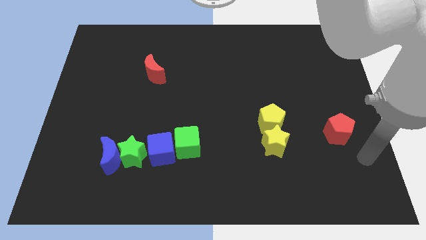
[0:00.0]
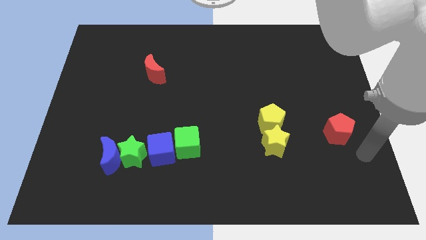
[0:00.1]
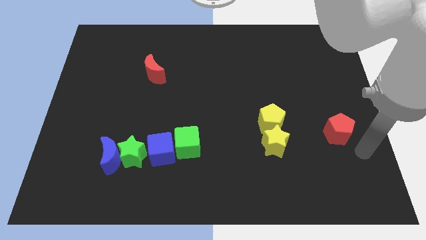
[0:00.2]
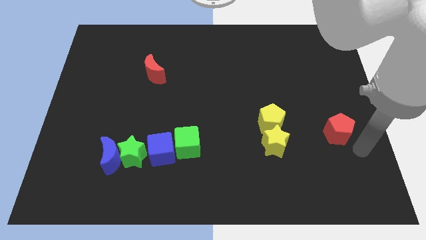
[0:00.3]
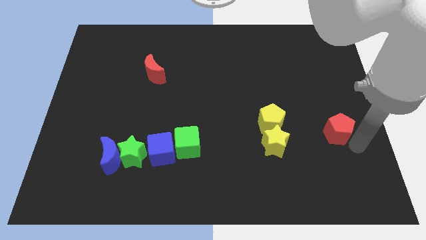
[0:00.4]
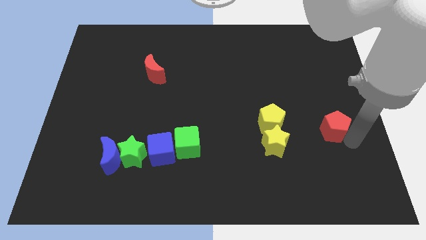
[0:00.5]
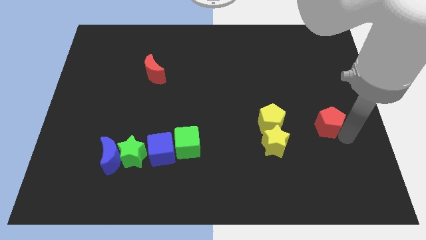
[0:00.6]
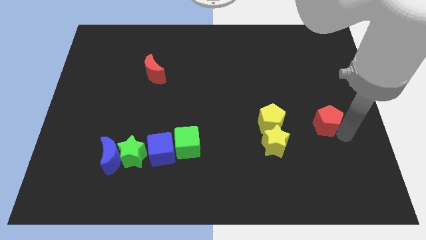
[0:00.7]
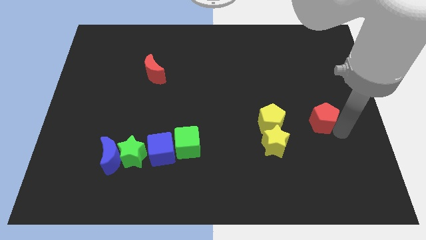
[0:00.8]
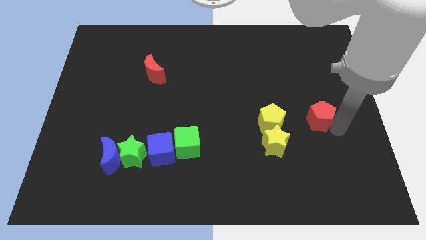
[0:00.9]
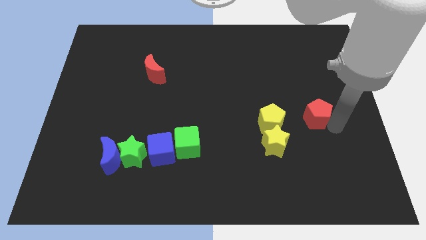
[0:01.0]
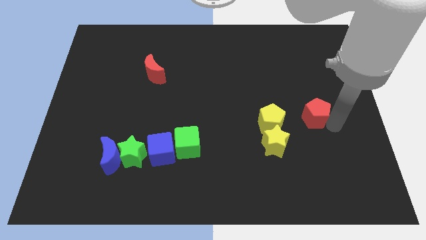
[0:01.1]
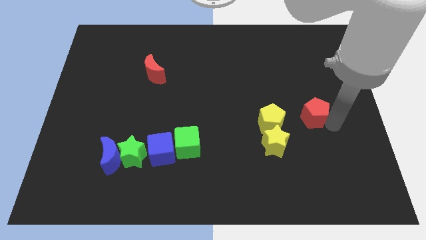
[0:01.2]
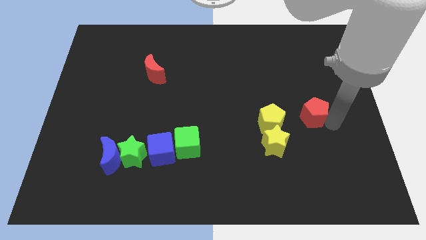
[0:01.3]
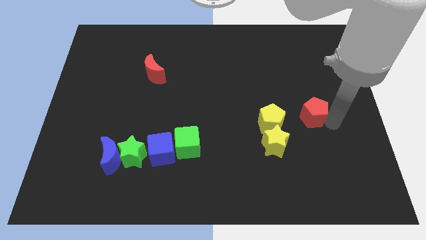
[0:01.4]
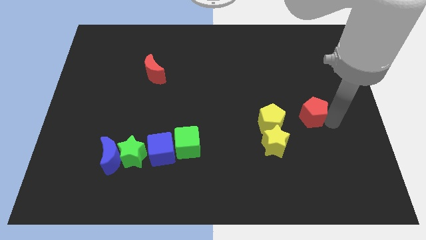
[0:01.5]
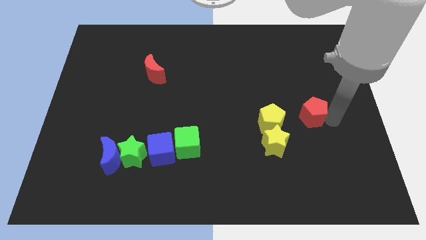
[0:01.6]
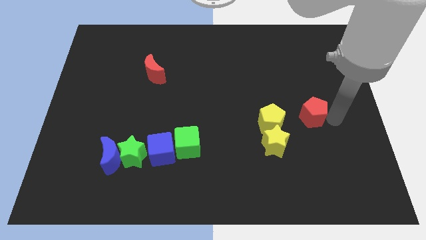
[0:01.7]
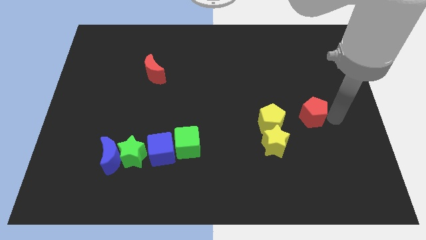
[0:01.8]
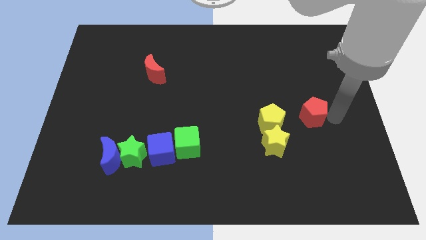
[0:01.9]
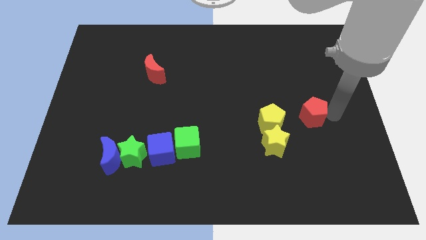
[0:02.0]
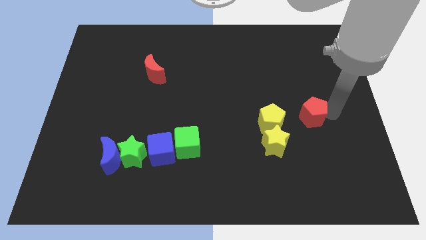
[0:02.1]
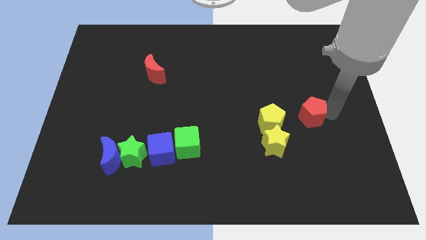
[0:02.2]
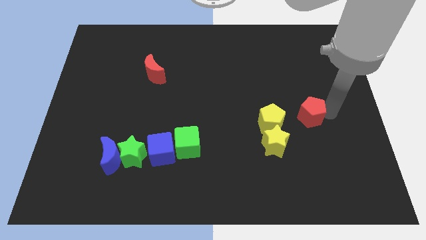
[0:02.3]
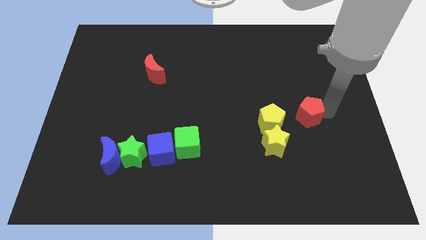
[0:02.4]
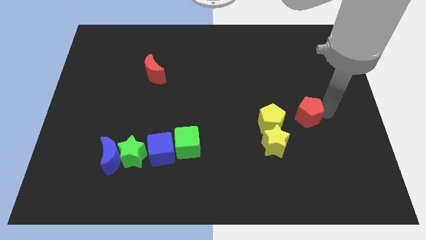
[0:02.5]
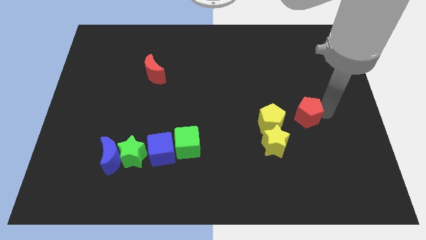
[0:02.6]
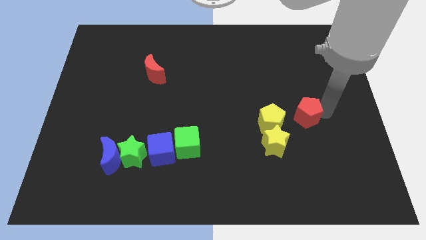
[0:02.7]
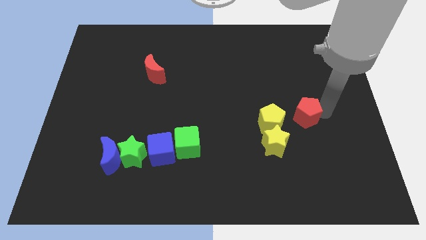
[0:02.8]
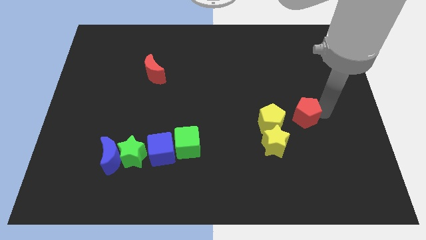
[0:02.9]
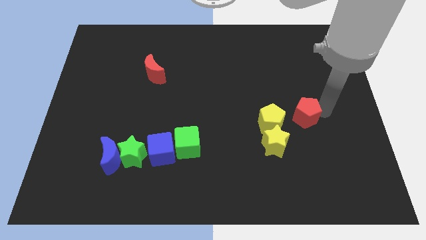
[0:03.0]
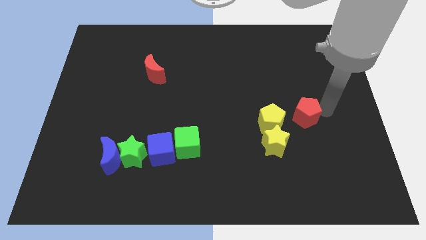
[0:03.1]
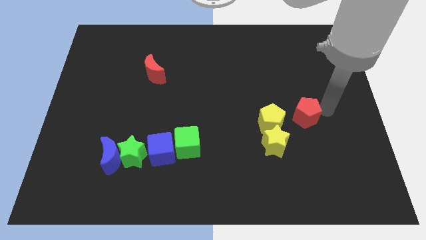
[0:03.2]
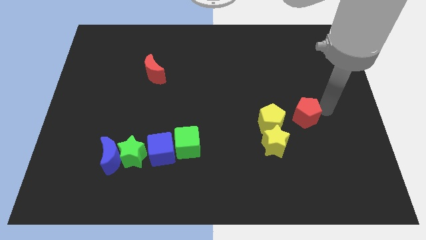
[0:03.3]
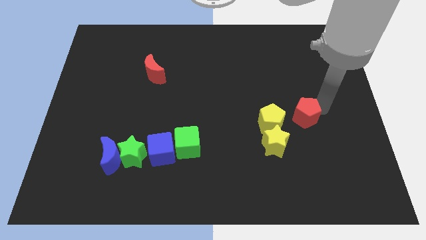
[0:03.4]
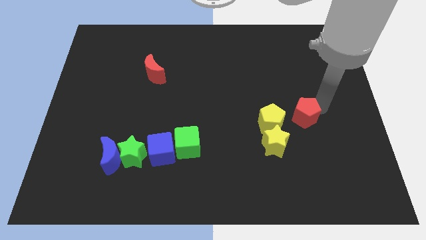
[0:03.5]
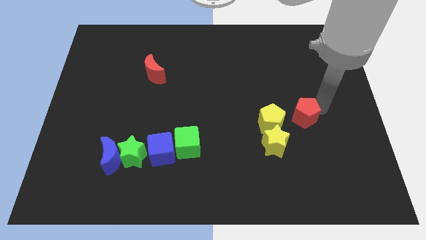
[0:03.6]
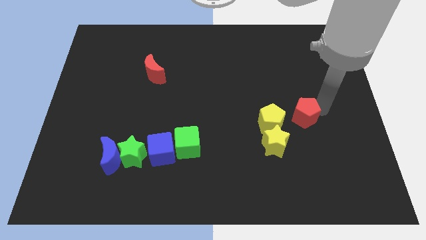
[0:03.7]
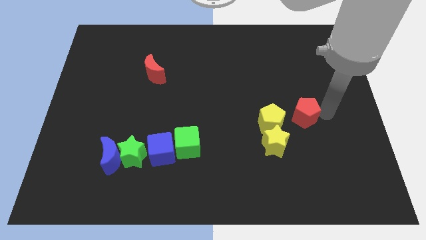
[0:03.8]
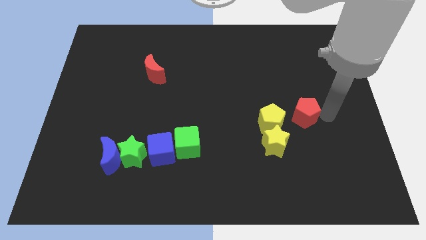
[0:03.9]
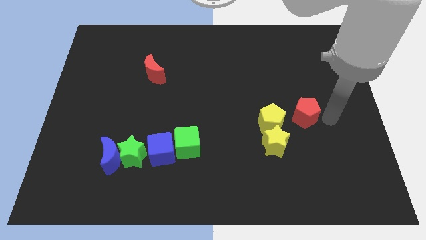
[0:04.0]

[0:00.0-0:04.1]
push the red pentagon to the right side of the yellow pentagon

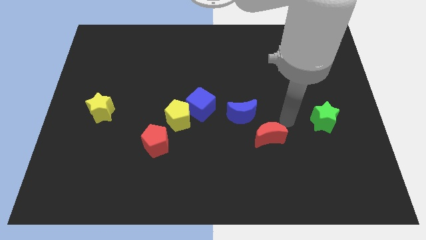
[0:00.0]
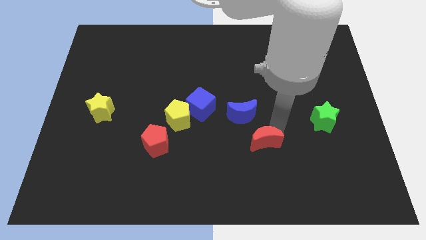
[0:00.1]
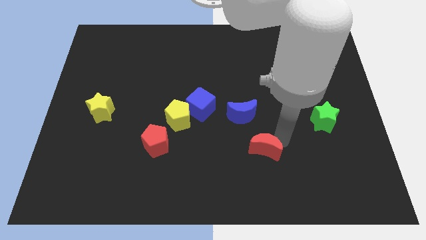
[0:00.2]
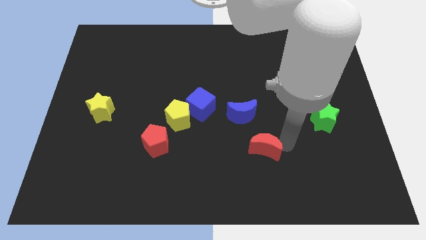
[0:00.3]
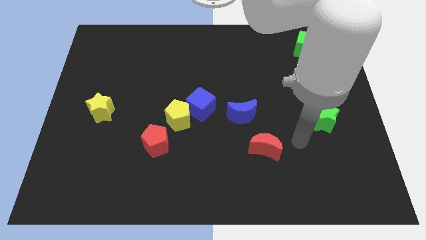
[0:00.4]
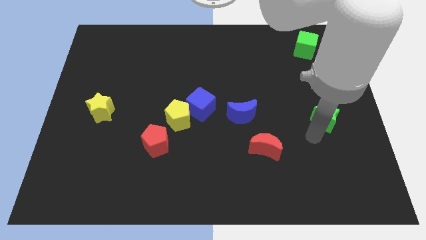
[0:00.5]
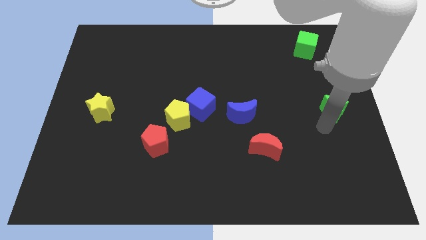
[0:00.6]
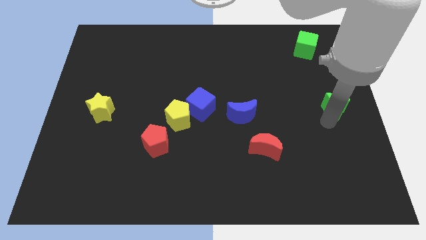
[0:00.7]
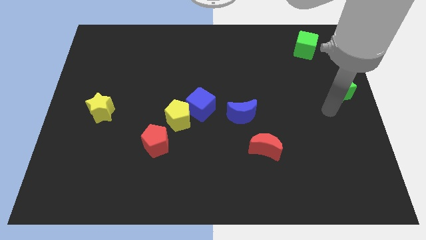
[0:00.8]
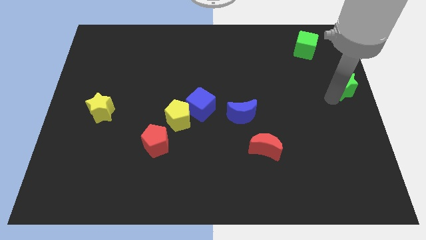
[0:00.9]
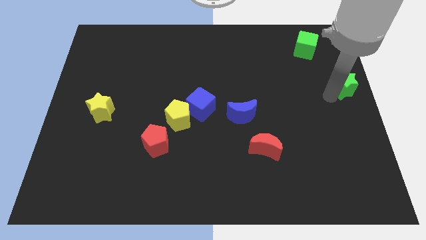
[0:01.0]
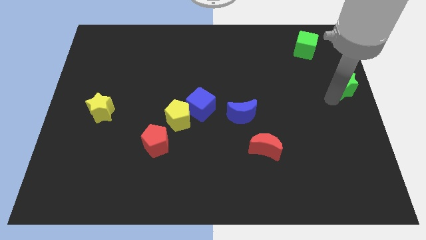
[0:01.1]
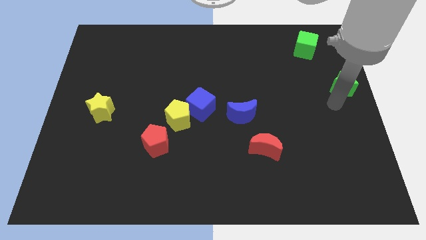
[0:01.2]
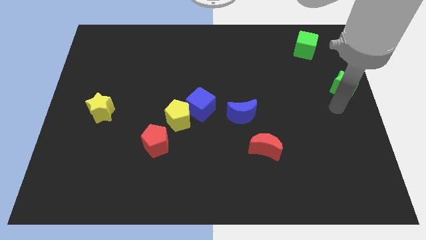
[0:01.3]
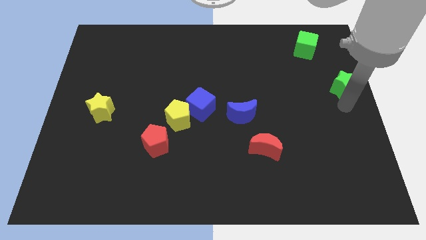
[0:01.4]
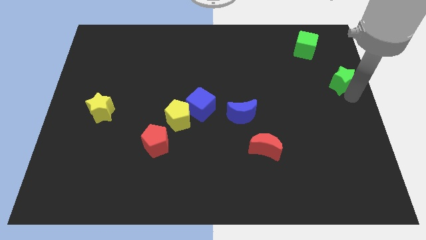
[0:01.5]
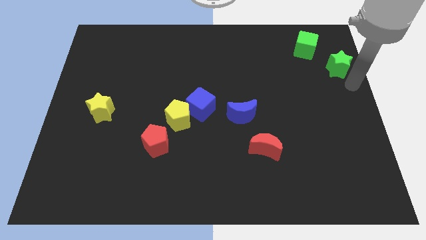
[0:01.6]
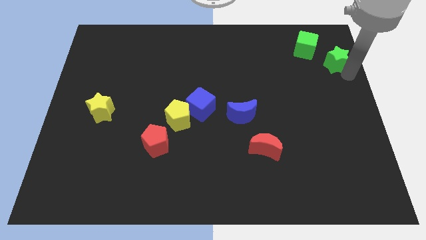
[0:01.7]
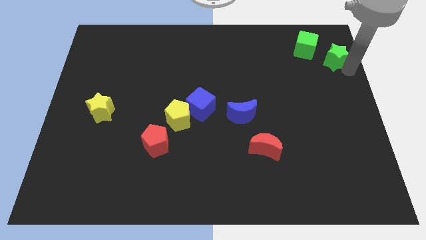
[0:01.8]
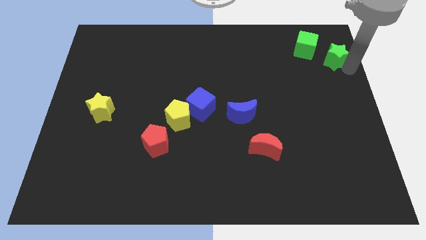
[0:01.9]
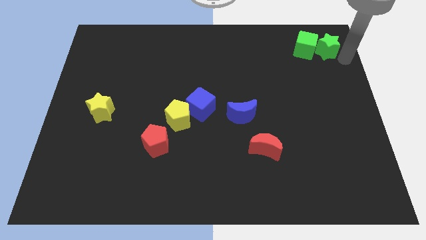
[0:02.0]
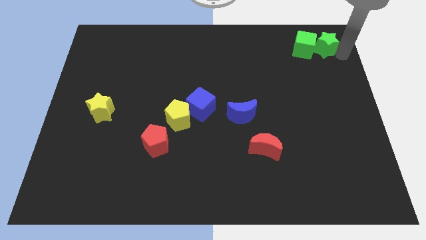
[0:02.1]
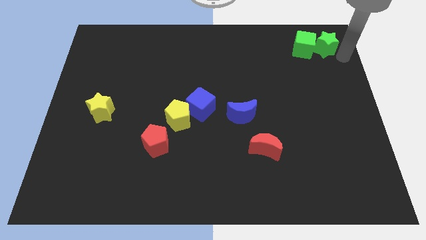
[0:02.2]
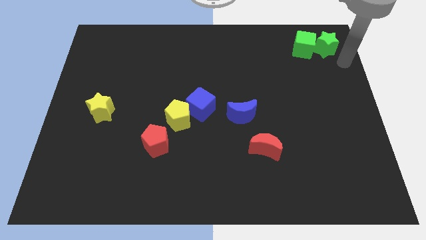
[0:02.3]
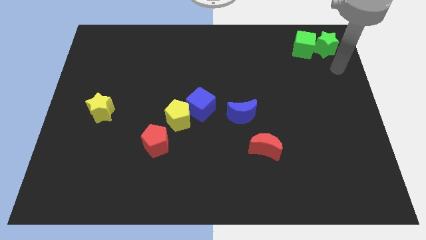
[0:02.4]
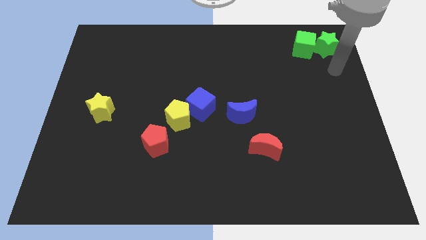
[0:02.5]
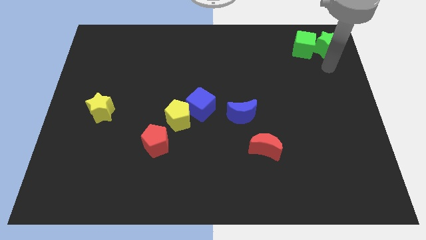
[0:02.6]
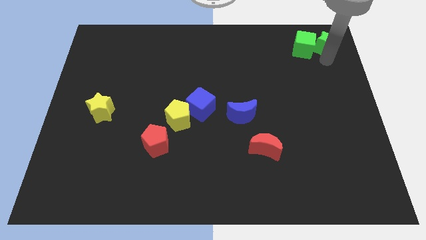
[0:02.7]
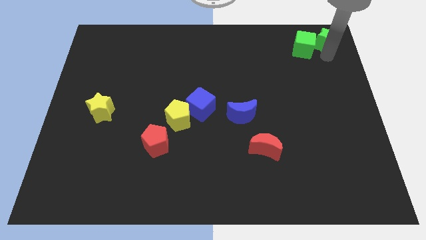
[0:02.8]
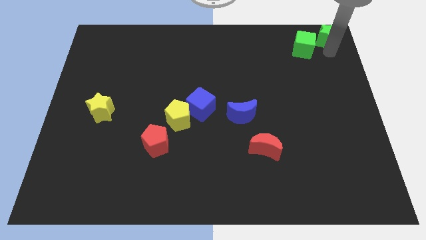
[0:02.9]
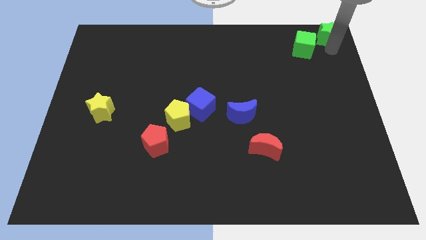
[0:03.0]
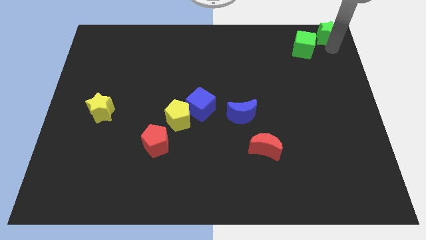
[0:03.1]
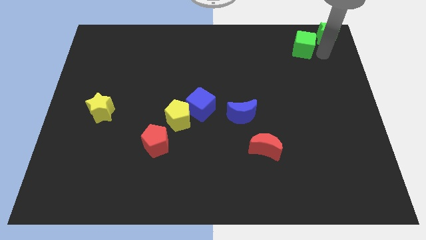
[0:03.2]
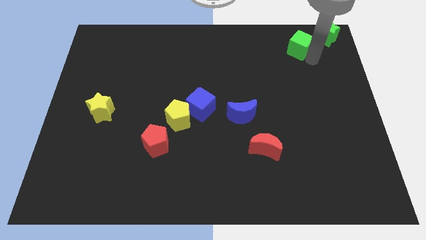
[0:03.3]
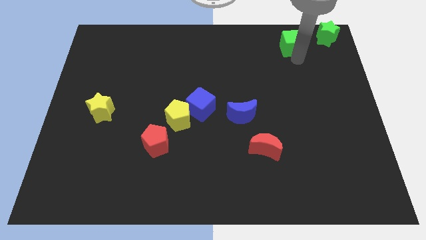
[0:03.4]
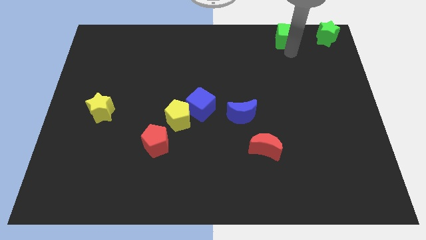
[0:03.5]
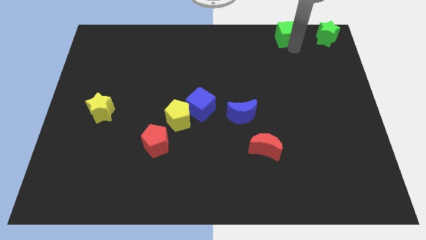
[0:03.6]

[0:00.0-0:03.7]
place green star to the top right corner of the boatrd

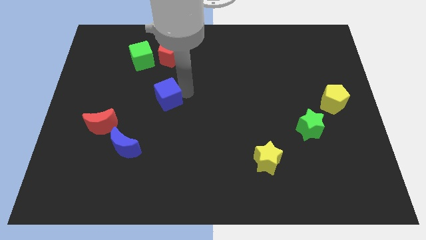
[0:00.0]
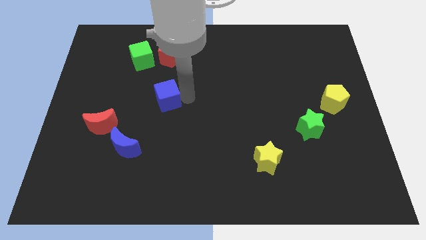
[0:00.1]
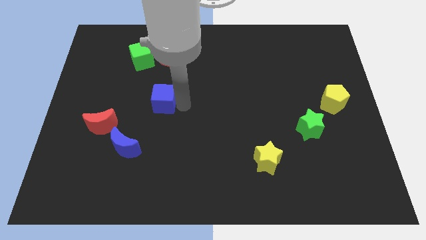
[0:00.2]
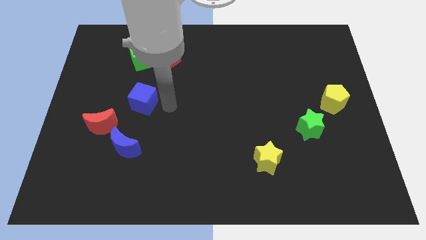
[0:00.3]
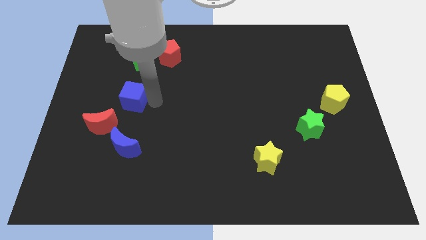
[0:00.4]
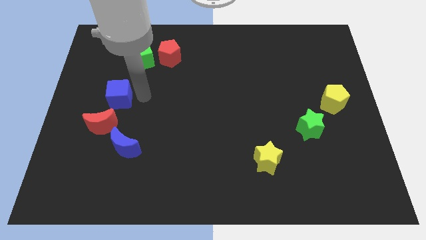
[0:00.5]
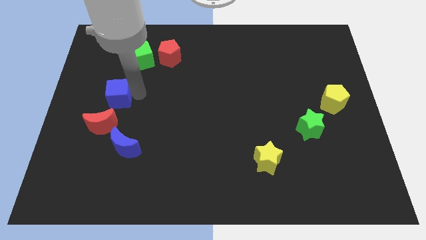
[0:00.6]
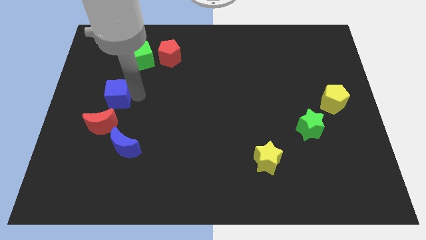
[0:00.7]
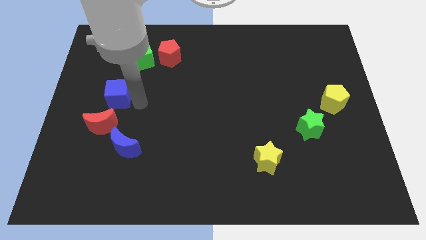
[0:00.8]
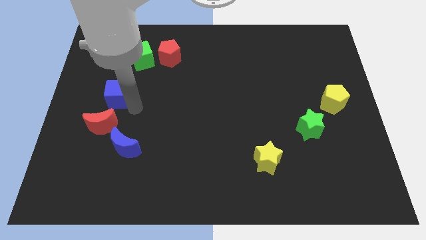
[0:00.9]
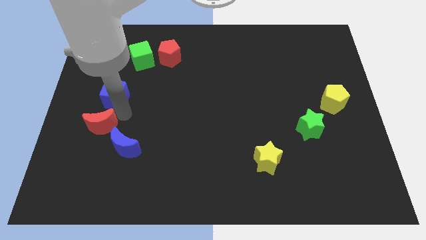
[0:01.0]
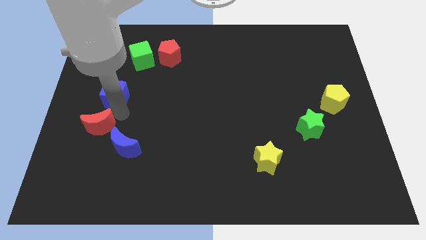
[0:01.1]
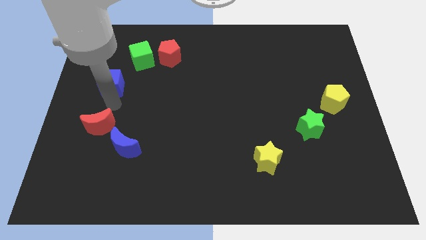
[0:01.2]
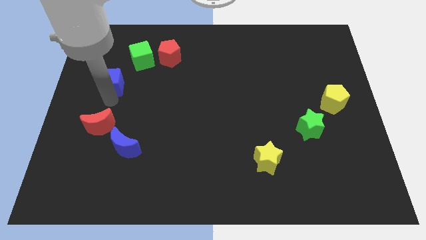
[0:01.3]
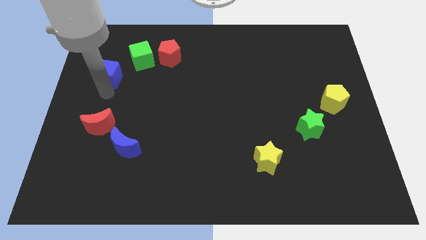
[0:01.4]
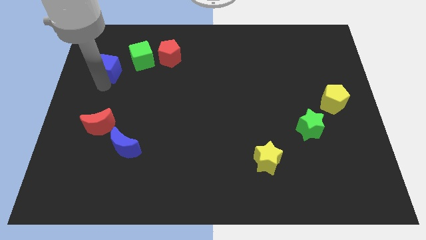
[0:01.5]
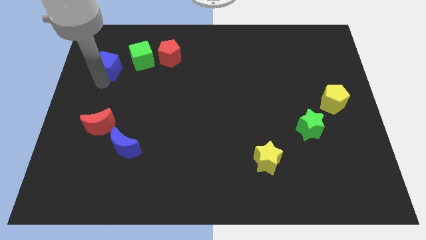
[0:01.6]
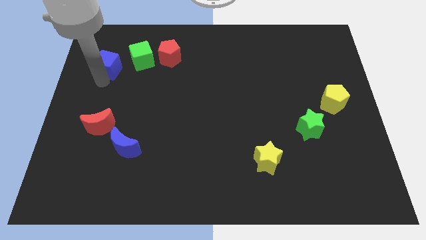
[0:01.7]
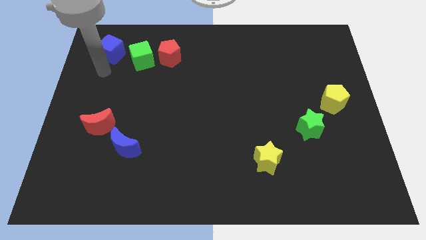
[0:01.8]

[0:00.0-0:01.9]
push the blue cube to the left of the green cube
